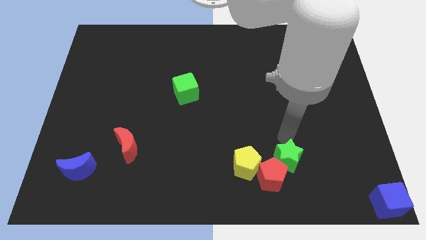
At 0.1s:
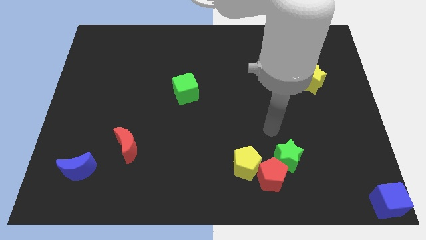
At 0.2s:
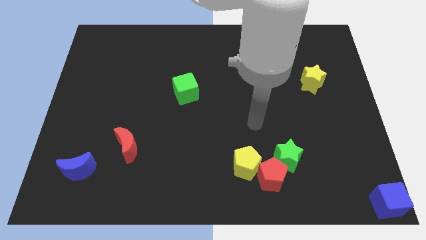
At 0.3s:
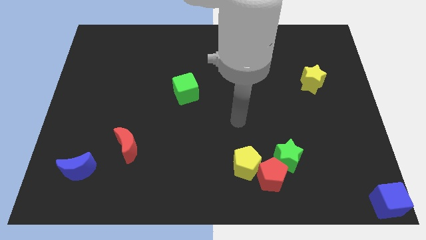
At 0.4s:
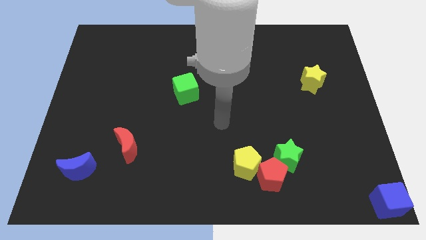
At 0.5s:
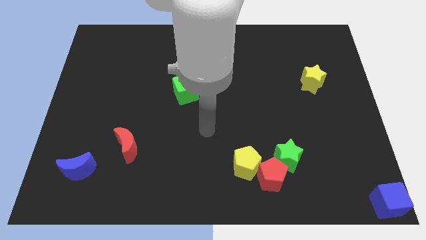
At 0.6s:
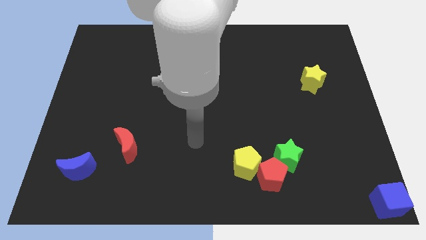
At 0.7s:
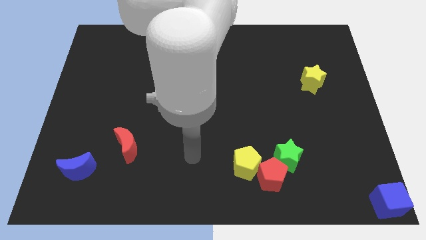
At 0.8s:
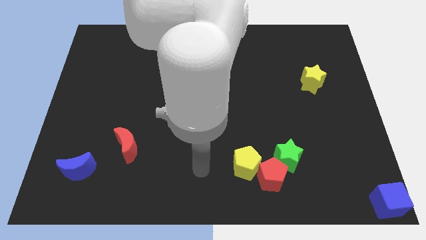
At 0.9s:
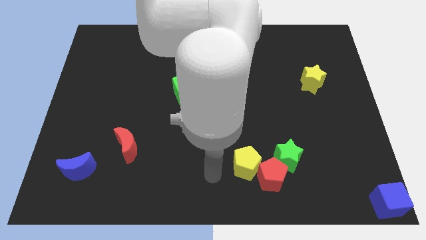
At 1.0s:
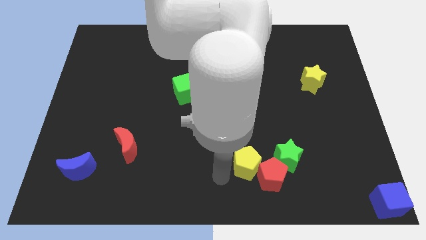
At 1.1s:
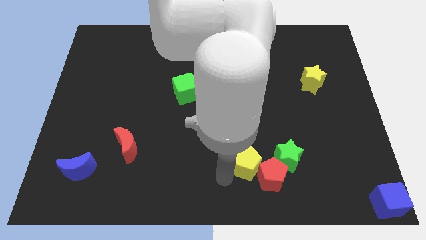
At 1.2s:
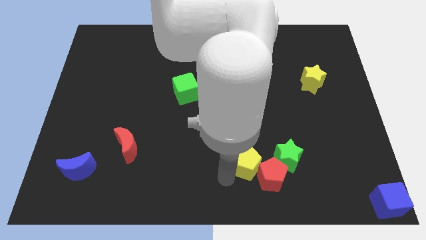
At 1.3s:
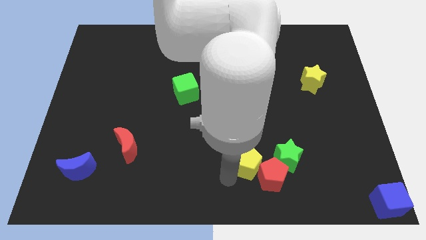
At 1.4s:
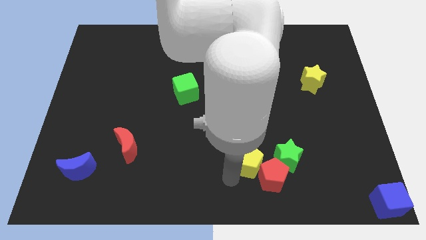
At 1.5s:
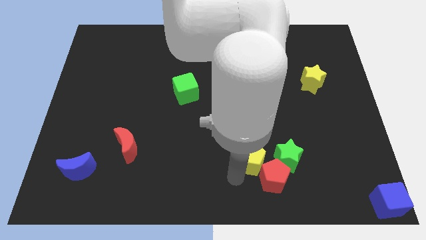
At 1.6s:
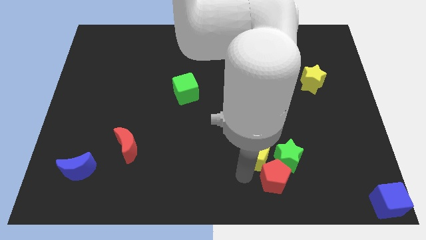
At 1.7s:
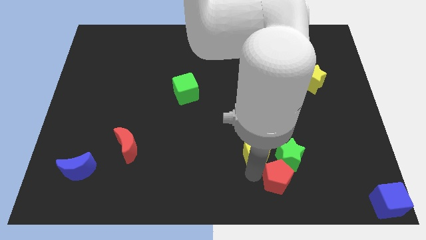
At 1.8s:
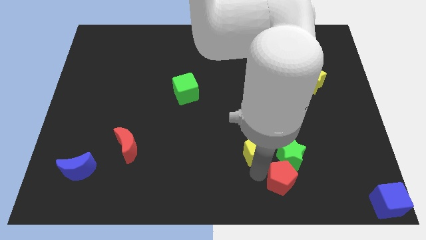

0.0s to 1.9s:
placed your arm below the yellow pentagon

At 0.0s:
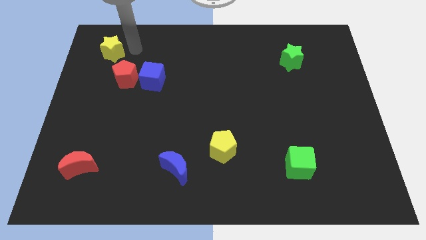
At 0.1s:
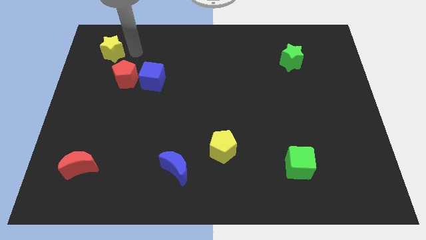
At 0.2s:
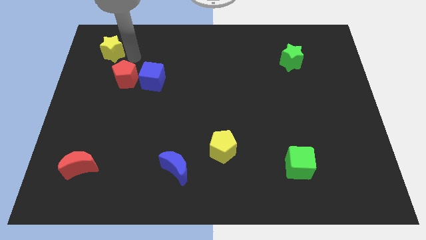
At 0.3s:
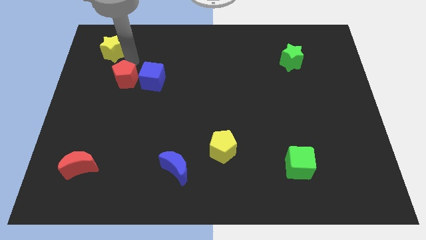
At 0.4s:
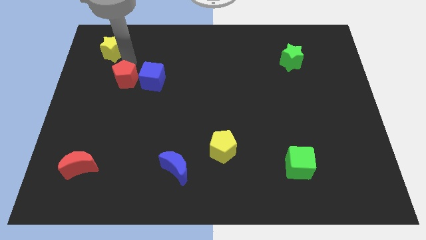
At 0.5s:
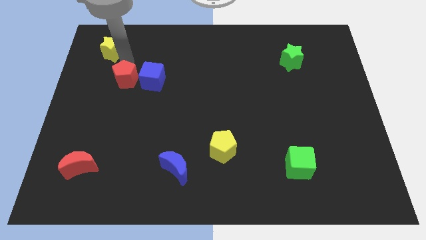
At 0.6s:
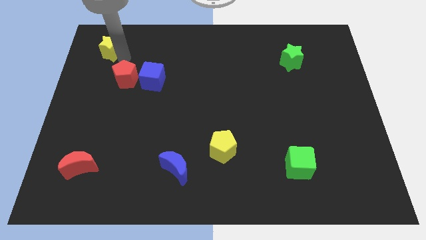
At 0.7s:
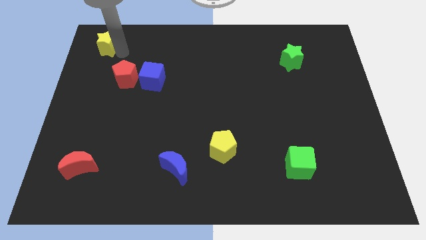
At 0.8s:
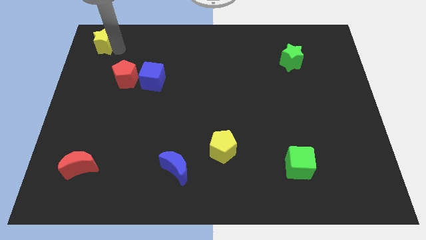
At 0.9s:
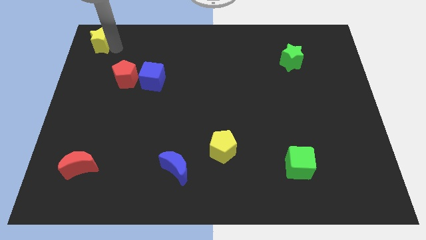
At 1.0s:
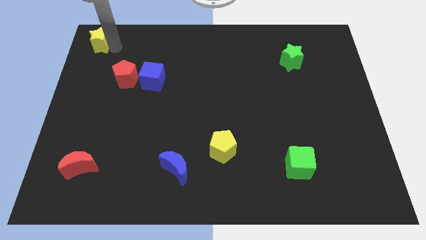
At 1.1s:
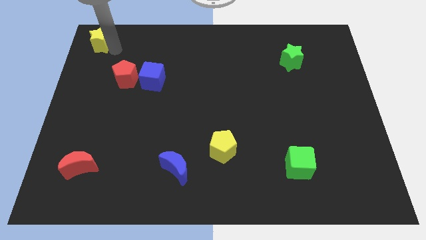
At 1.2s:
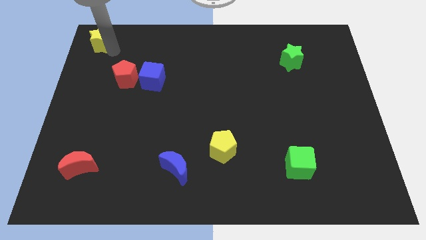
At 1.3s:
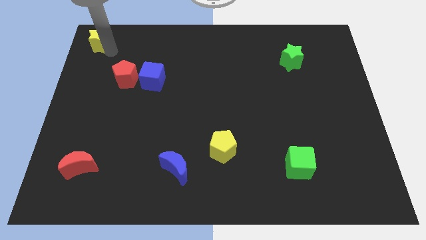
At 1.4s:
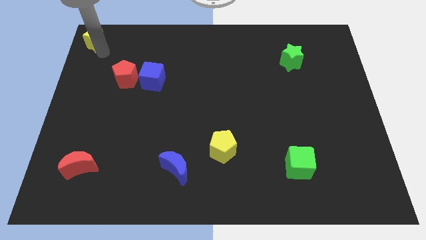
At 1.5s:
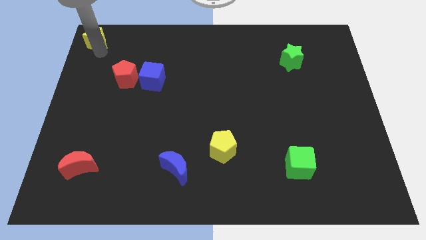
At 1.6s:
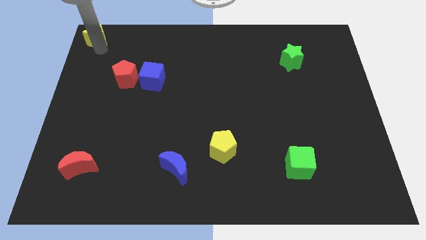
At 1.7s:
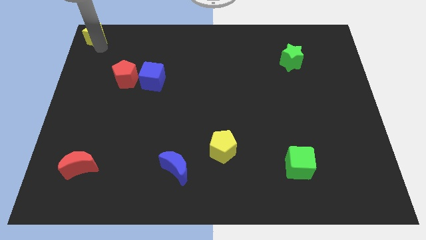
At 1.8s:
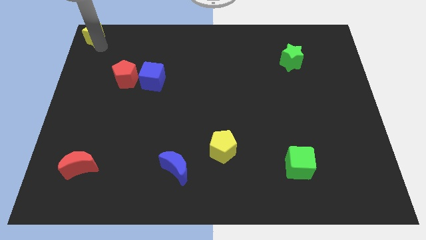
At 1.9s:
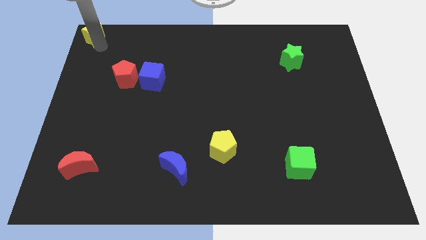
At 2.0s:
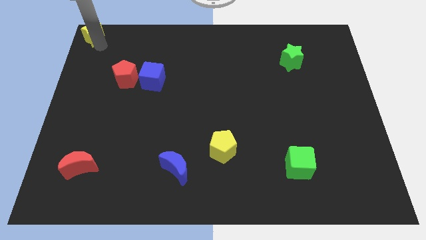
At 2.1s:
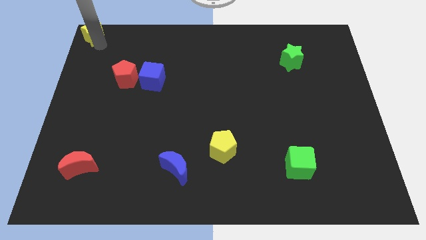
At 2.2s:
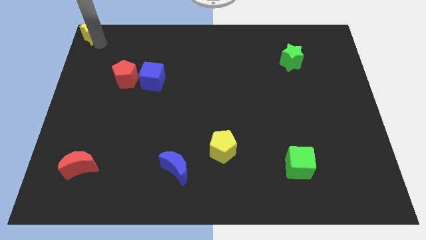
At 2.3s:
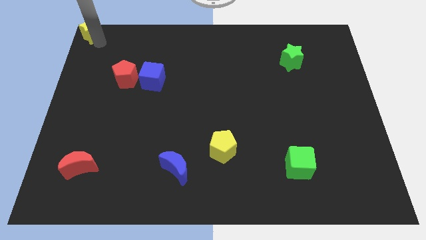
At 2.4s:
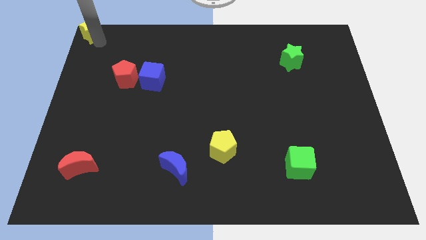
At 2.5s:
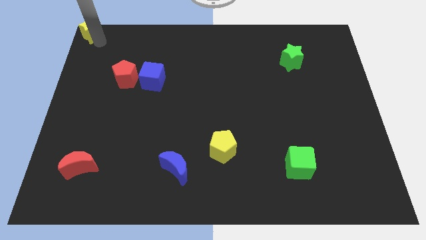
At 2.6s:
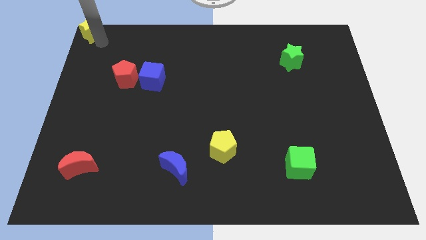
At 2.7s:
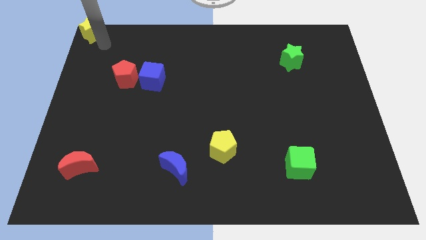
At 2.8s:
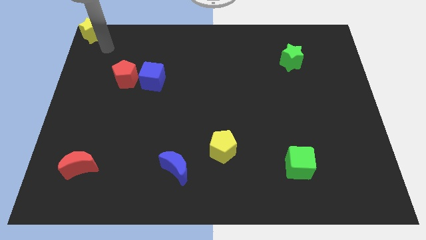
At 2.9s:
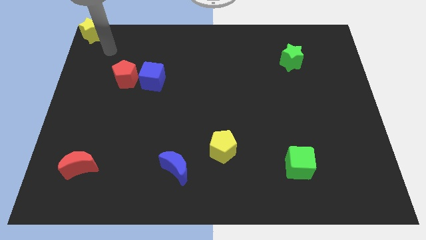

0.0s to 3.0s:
place the yellow star to the top left corner of the board

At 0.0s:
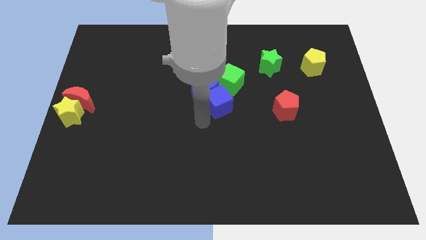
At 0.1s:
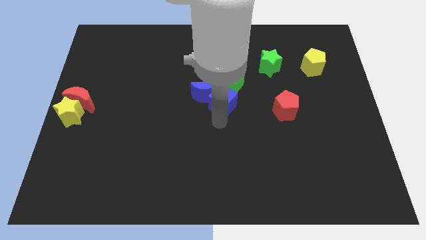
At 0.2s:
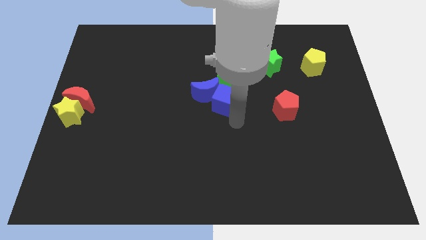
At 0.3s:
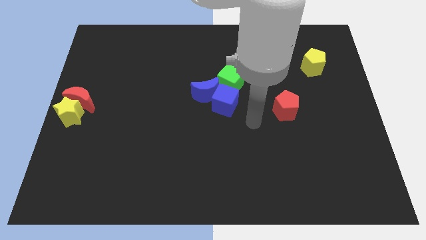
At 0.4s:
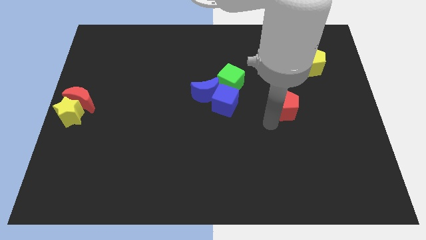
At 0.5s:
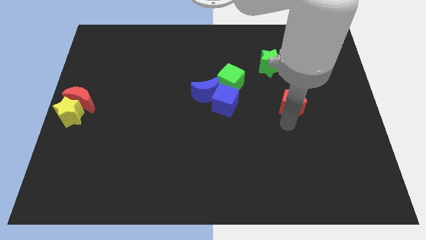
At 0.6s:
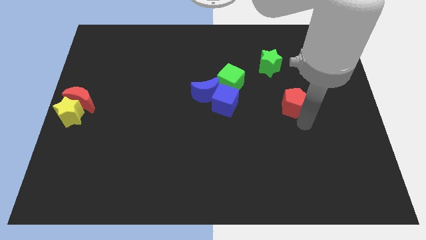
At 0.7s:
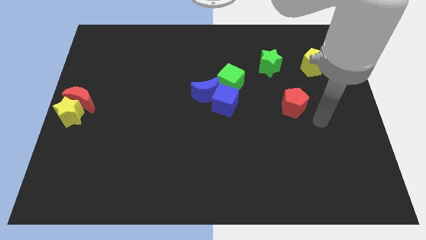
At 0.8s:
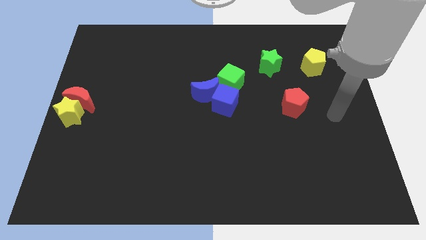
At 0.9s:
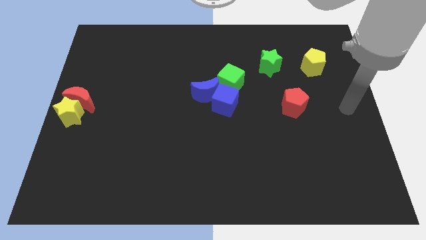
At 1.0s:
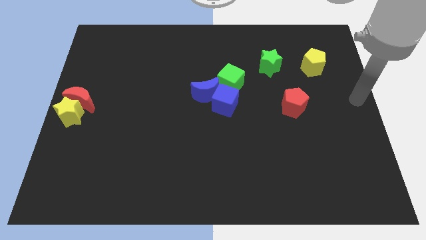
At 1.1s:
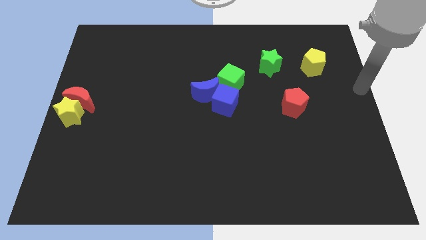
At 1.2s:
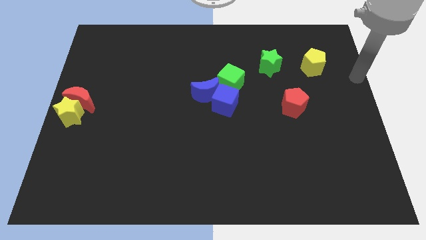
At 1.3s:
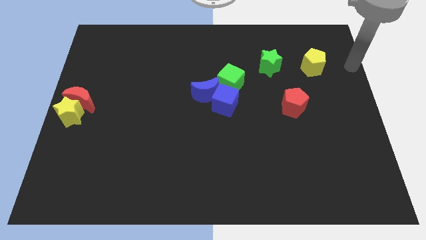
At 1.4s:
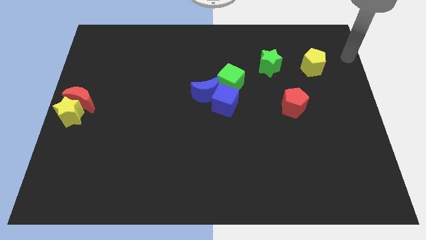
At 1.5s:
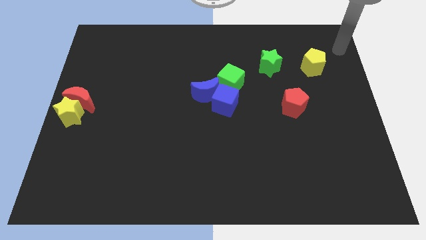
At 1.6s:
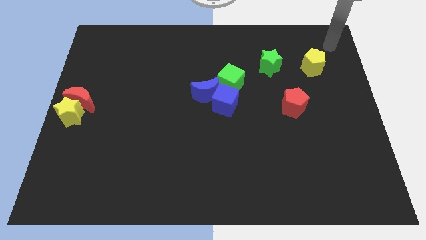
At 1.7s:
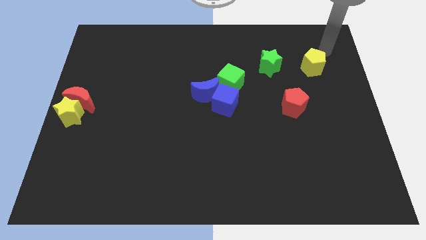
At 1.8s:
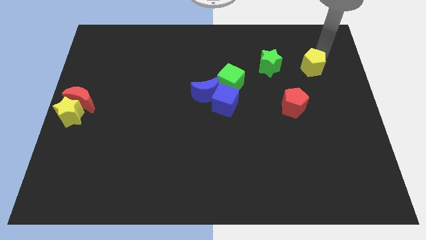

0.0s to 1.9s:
move your arm to the top of the yellow pentagon

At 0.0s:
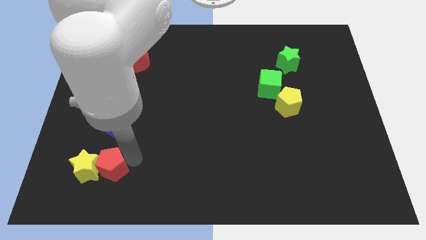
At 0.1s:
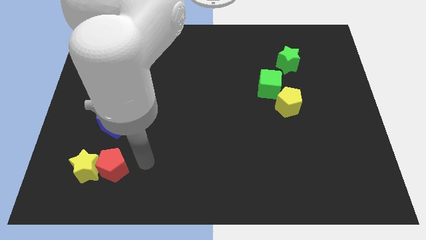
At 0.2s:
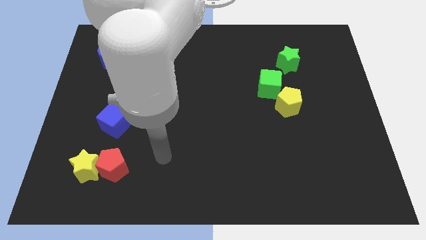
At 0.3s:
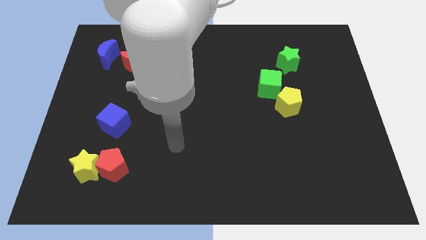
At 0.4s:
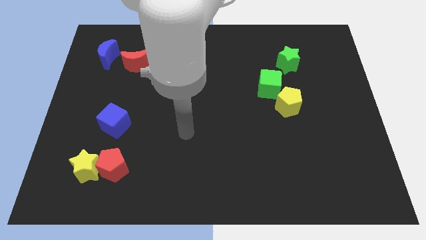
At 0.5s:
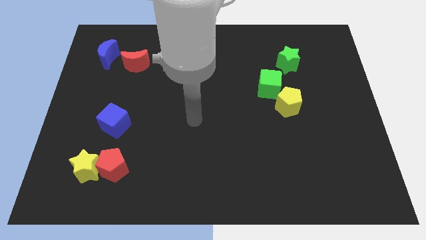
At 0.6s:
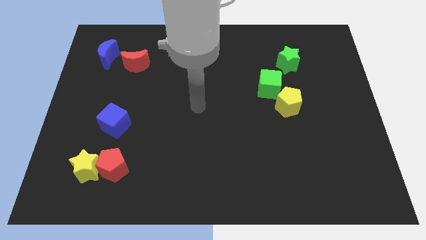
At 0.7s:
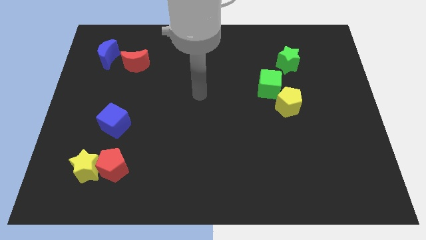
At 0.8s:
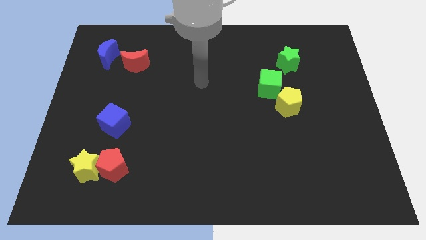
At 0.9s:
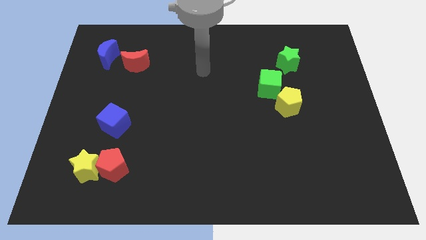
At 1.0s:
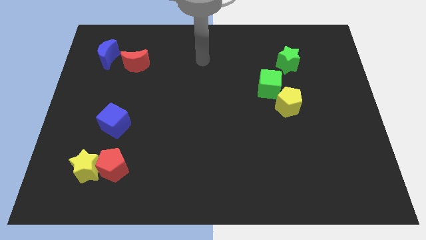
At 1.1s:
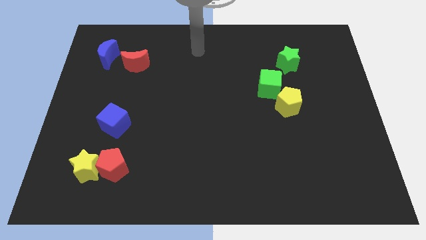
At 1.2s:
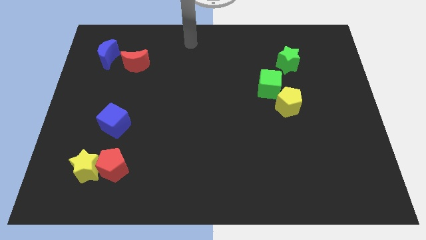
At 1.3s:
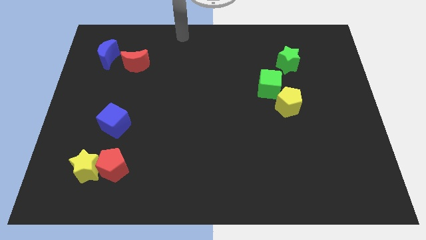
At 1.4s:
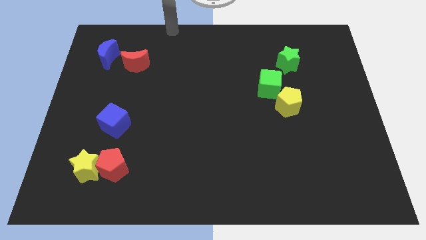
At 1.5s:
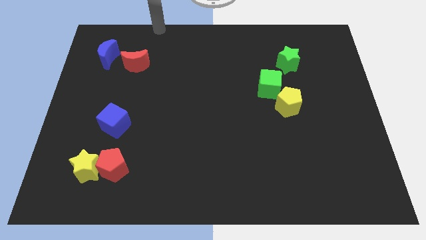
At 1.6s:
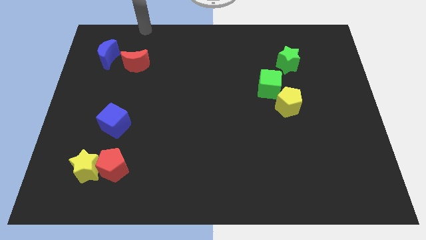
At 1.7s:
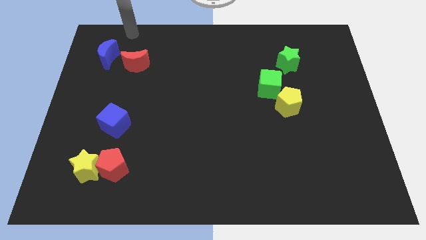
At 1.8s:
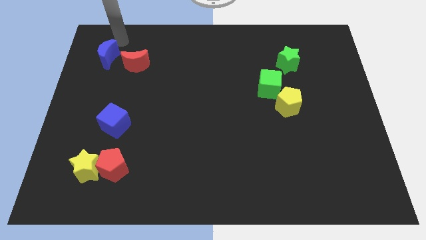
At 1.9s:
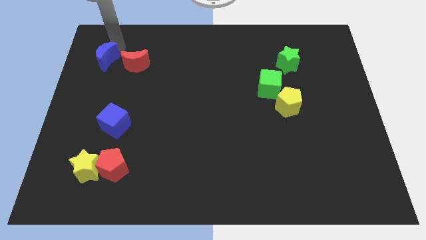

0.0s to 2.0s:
place your arm at the top of the blue crescent

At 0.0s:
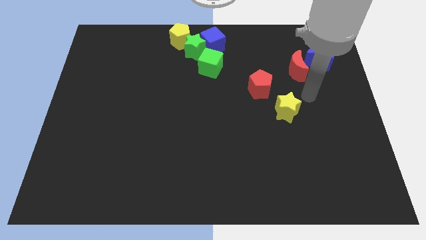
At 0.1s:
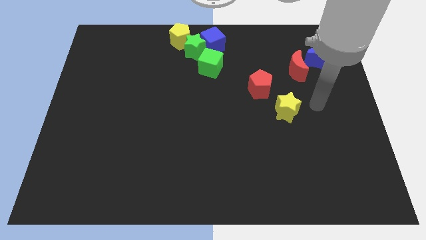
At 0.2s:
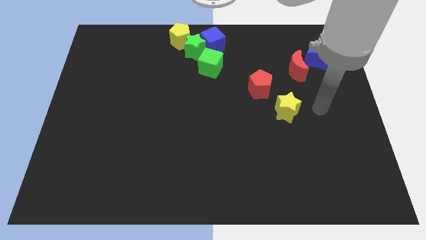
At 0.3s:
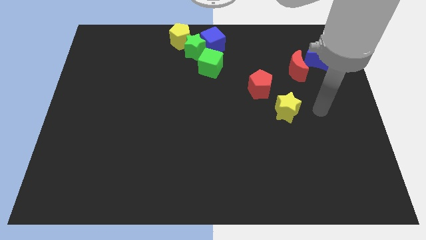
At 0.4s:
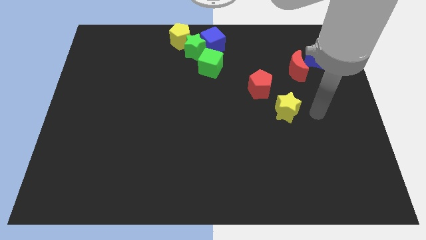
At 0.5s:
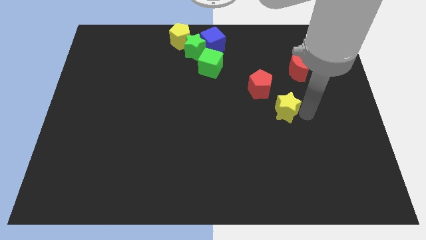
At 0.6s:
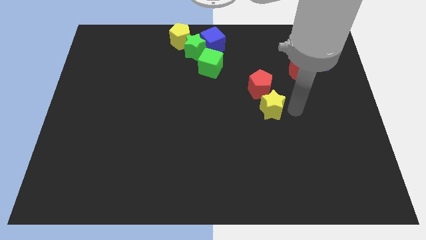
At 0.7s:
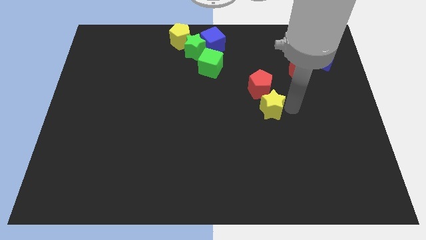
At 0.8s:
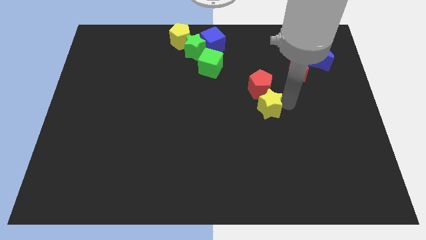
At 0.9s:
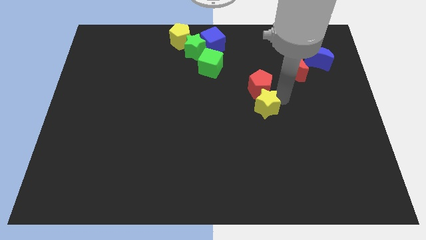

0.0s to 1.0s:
place the yellow star below the red pentagon
